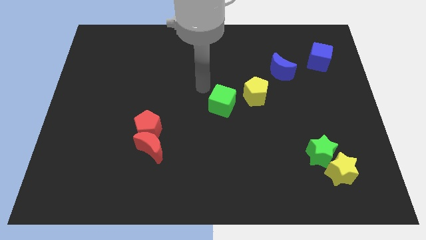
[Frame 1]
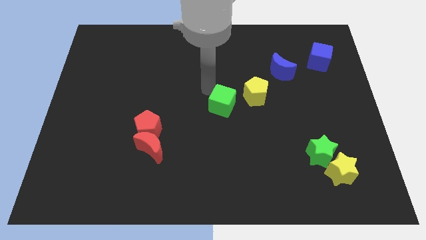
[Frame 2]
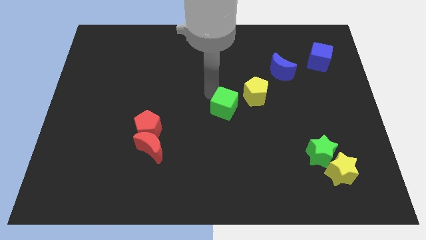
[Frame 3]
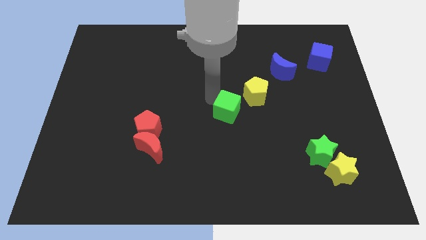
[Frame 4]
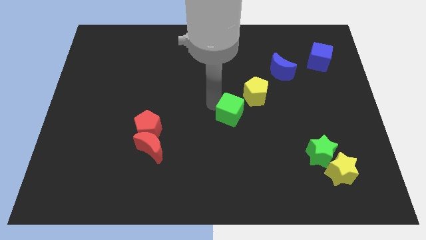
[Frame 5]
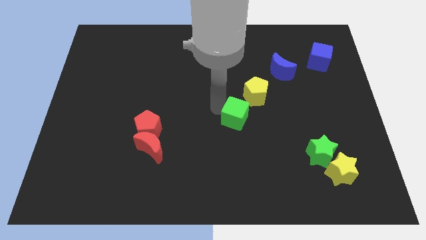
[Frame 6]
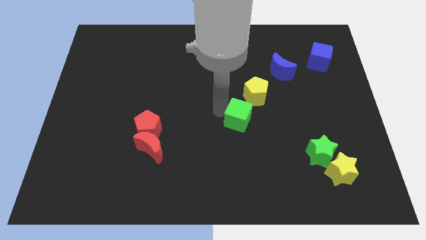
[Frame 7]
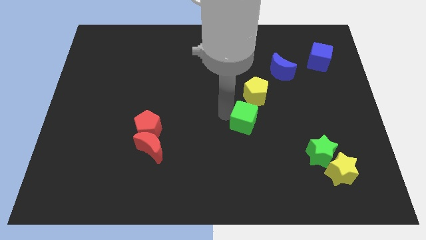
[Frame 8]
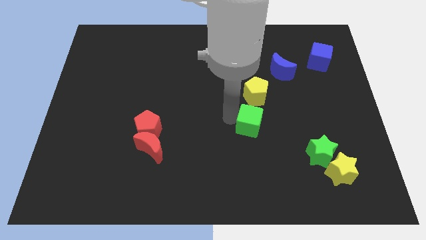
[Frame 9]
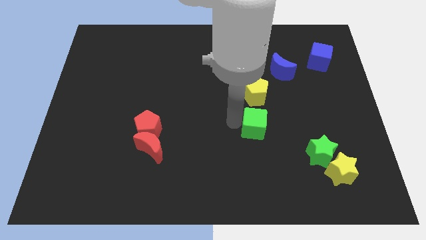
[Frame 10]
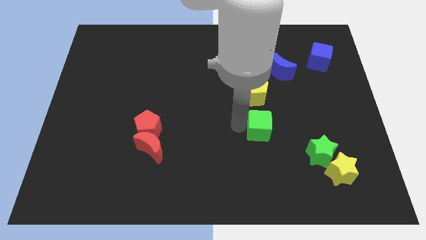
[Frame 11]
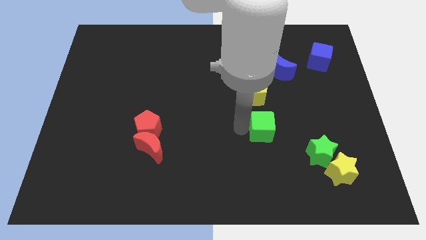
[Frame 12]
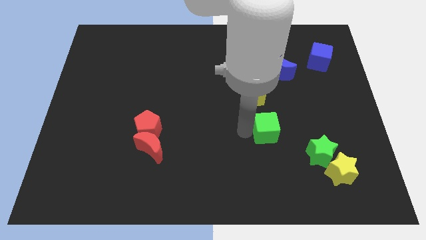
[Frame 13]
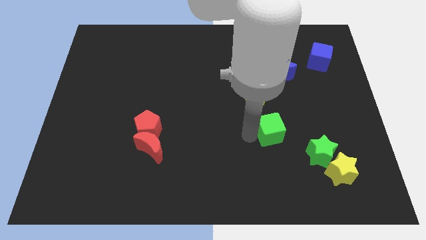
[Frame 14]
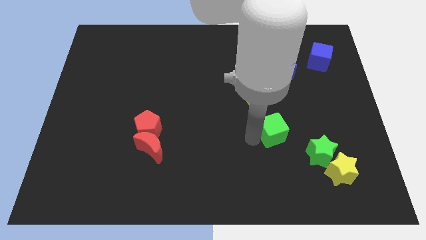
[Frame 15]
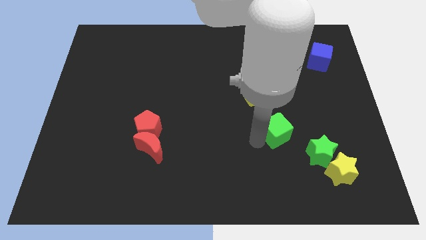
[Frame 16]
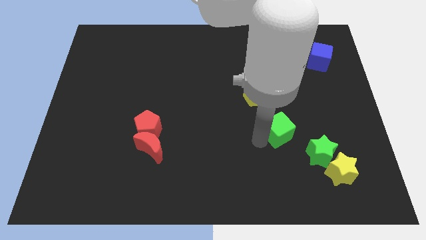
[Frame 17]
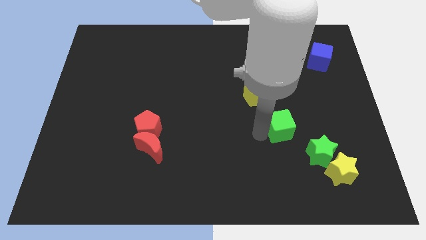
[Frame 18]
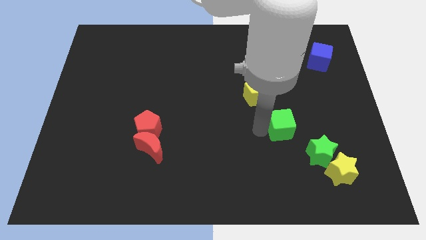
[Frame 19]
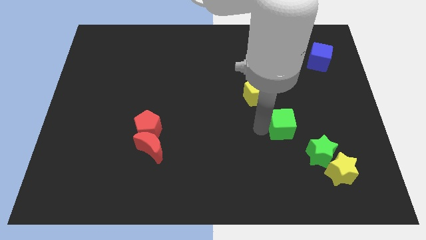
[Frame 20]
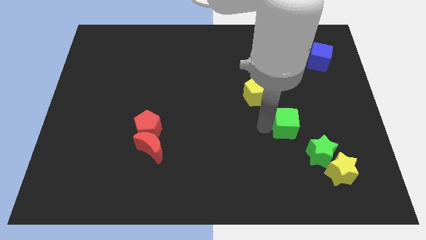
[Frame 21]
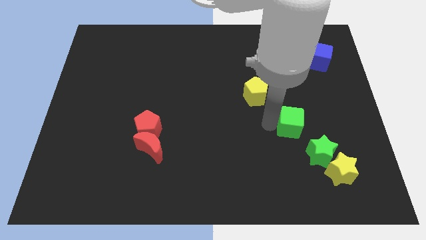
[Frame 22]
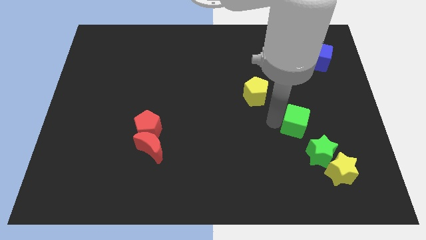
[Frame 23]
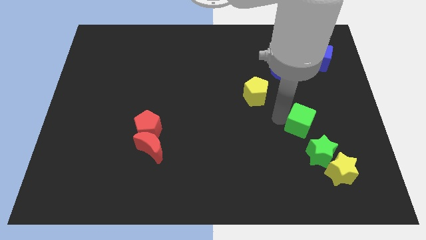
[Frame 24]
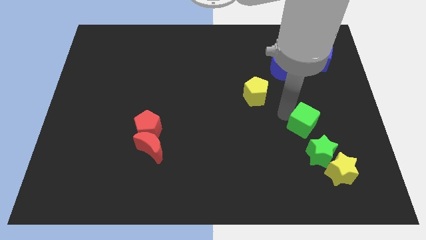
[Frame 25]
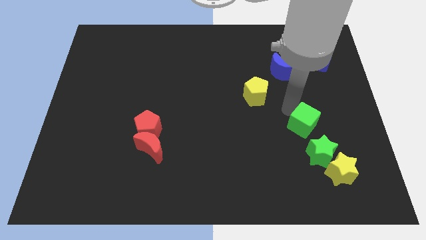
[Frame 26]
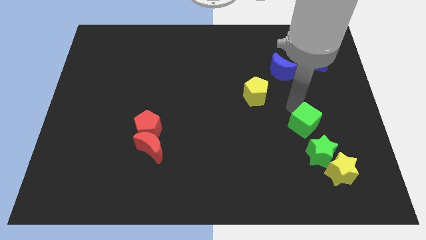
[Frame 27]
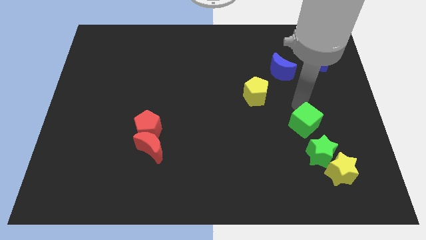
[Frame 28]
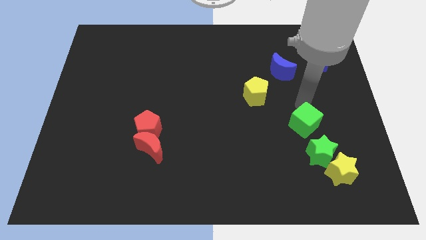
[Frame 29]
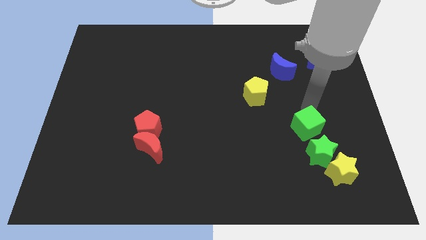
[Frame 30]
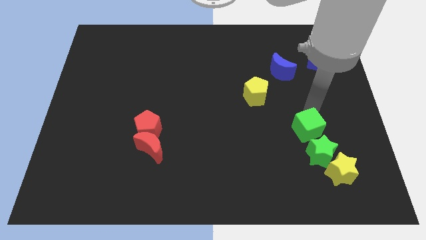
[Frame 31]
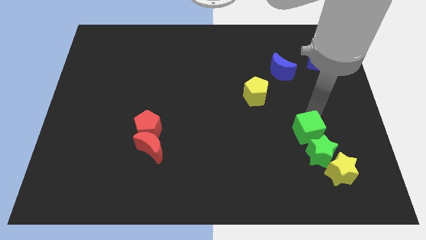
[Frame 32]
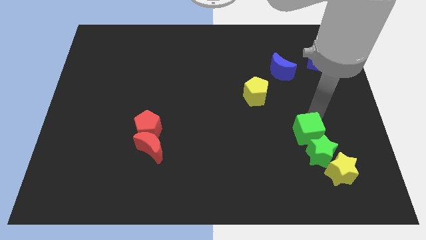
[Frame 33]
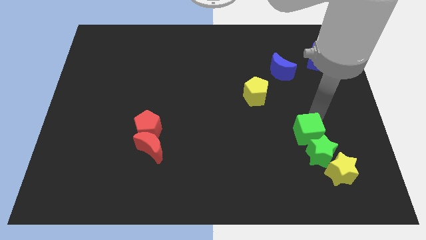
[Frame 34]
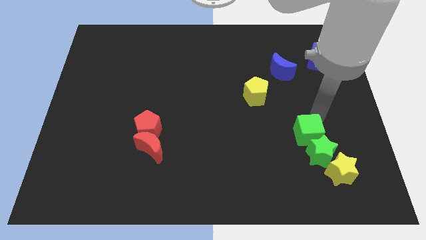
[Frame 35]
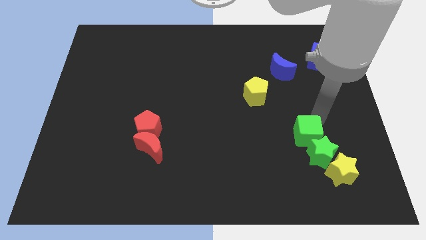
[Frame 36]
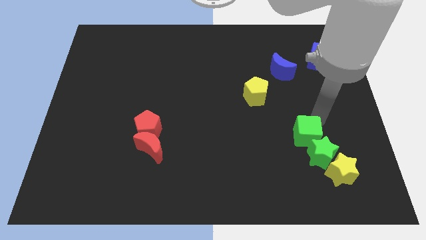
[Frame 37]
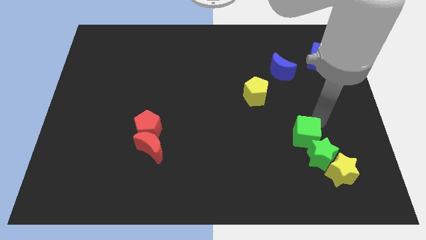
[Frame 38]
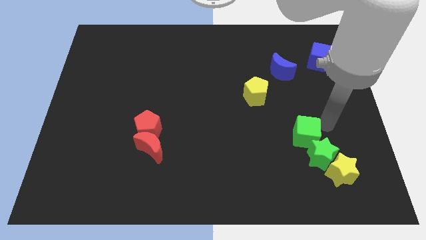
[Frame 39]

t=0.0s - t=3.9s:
push the green cube above to the green star

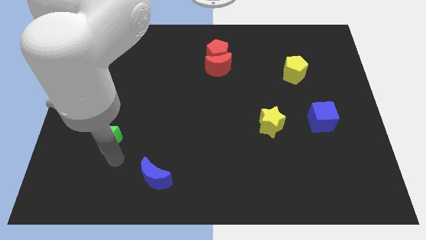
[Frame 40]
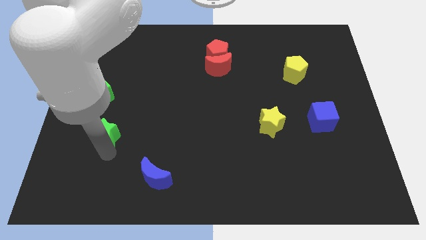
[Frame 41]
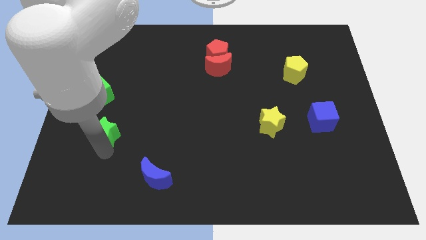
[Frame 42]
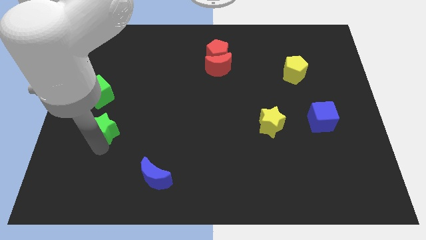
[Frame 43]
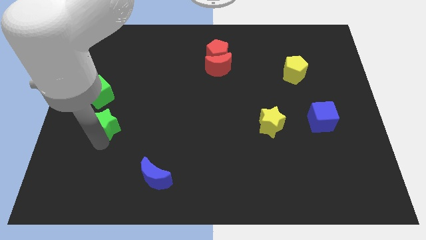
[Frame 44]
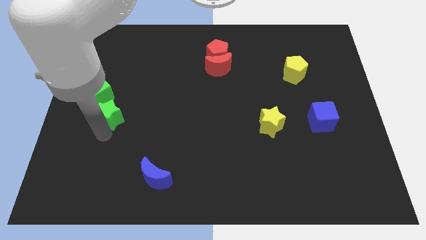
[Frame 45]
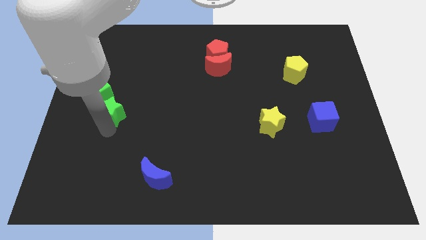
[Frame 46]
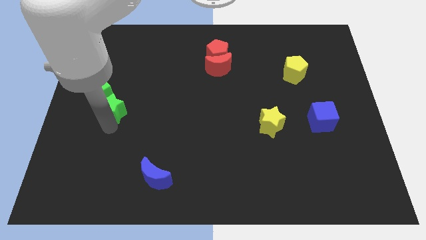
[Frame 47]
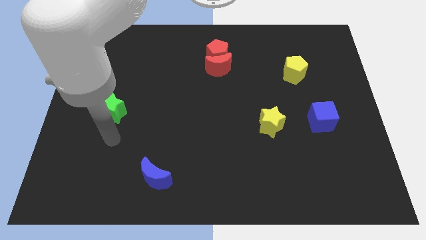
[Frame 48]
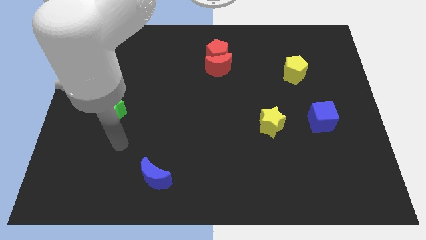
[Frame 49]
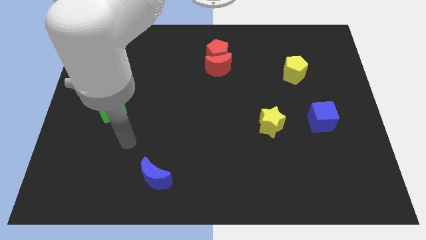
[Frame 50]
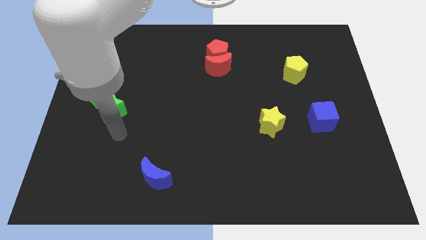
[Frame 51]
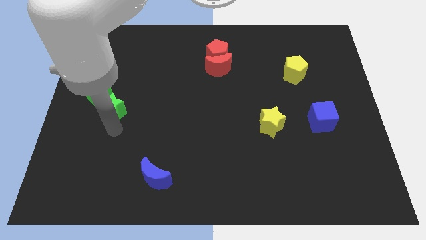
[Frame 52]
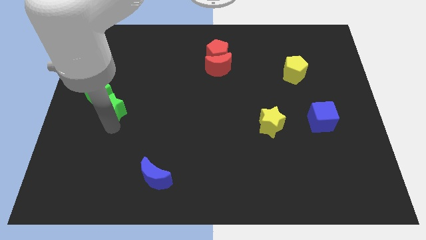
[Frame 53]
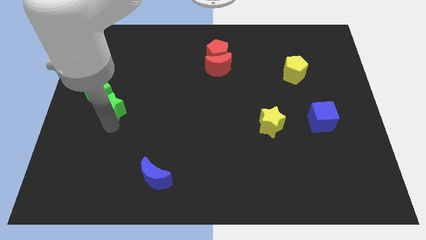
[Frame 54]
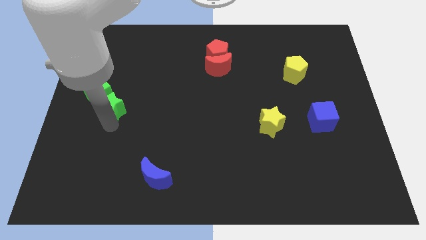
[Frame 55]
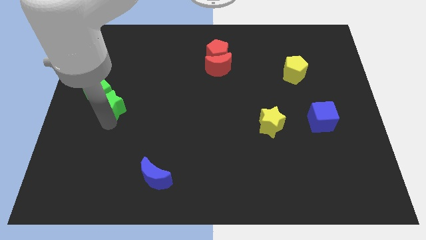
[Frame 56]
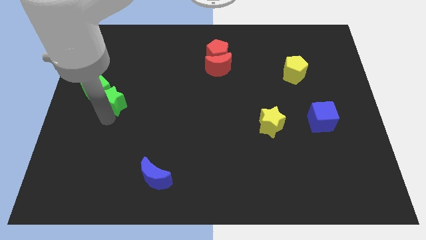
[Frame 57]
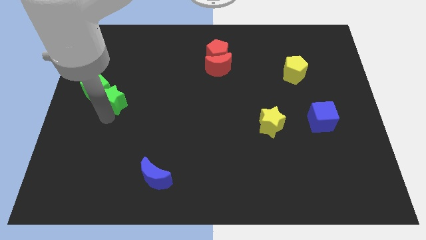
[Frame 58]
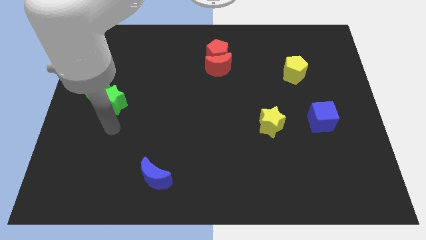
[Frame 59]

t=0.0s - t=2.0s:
push the green star into the green cube

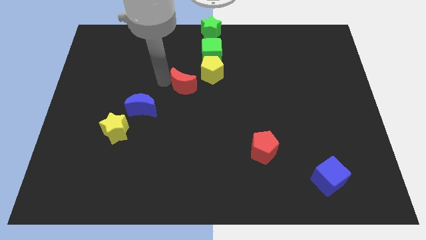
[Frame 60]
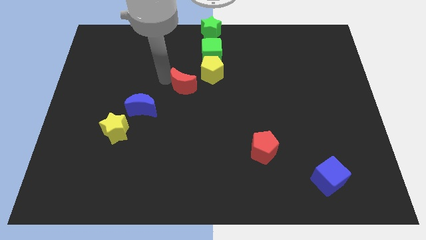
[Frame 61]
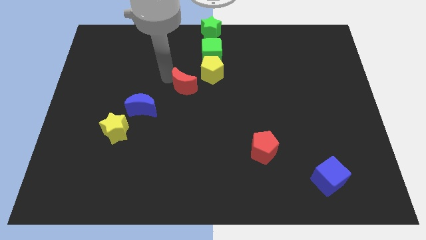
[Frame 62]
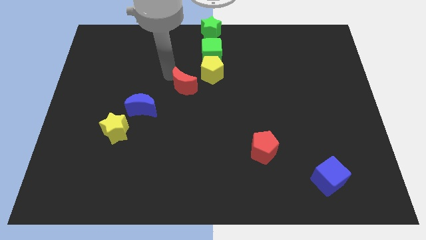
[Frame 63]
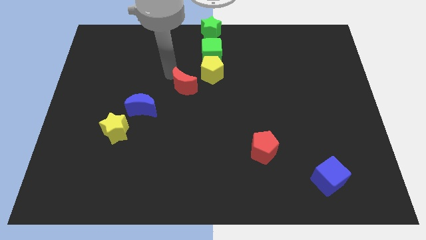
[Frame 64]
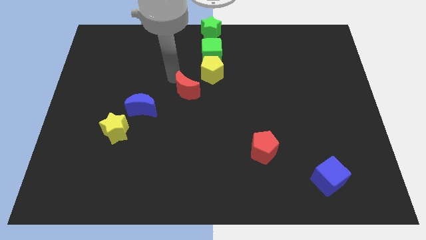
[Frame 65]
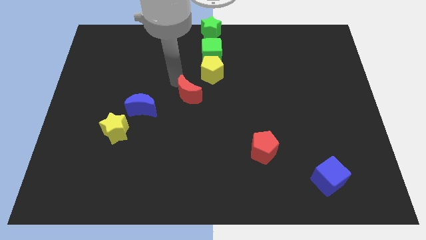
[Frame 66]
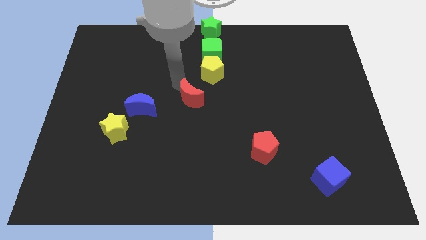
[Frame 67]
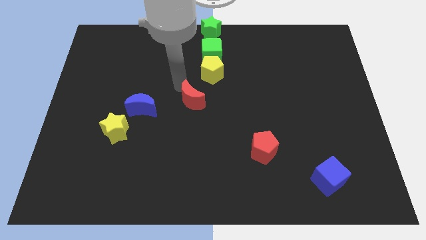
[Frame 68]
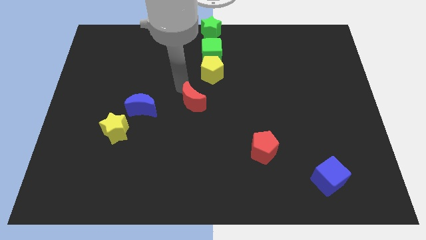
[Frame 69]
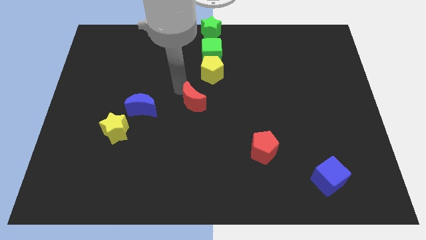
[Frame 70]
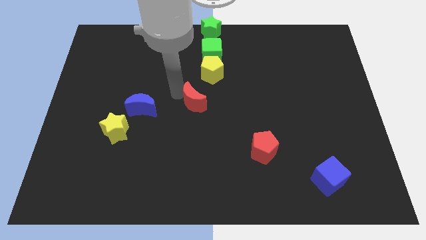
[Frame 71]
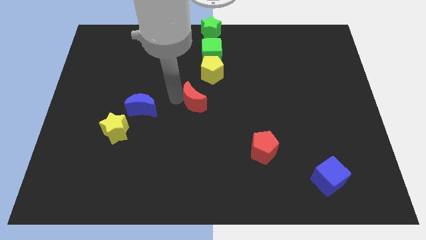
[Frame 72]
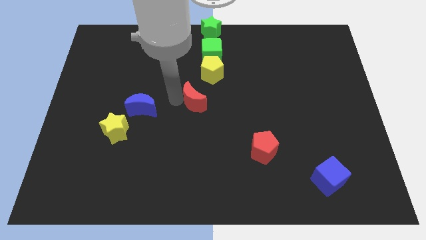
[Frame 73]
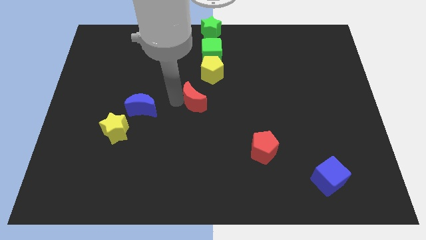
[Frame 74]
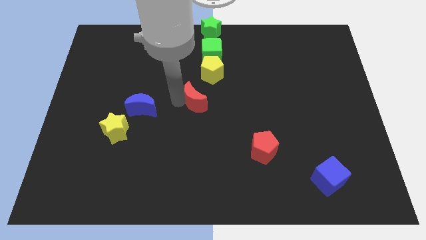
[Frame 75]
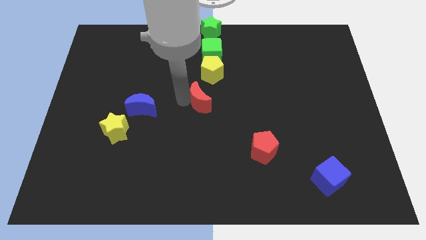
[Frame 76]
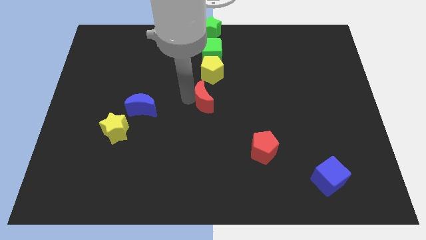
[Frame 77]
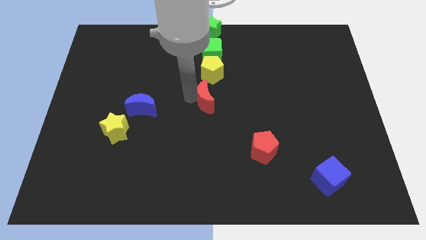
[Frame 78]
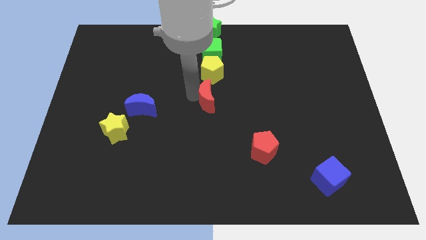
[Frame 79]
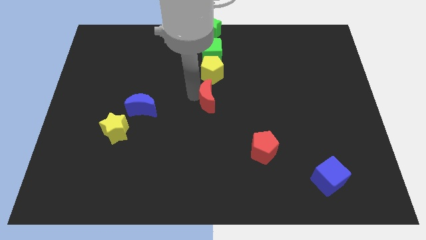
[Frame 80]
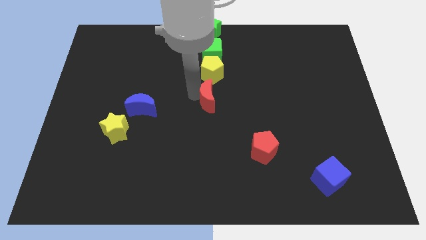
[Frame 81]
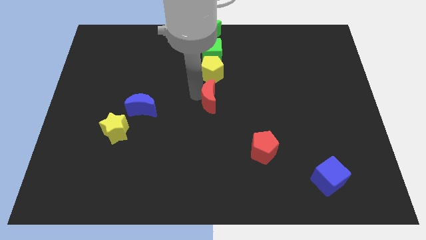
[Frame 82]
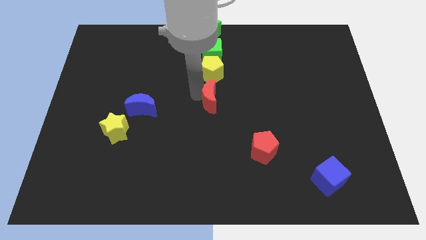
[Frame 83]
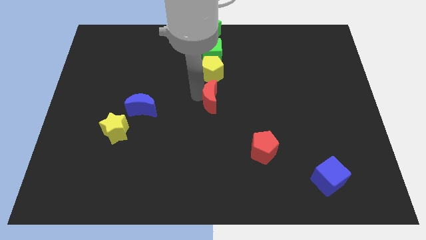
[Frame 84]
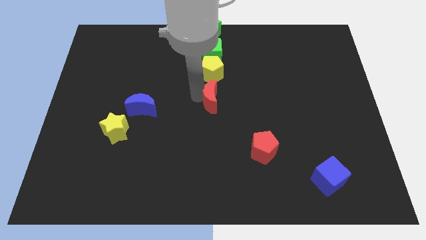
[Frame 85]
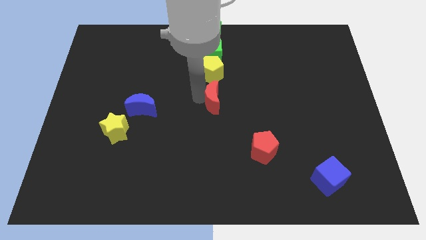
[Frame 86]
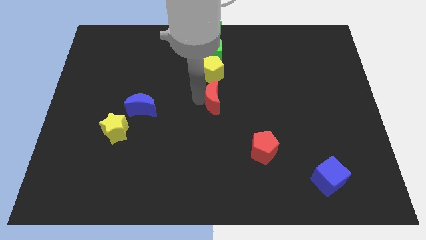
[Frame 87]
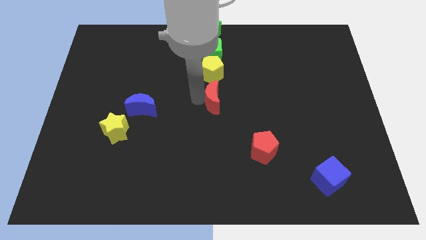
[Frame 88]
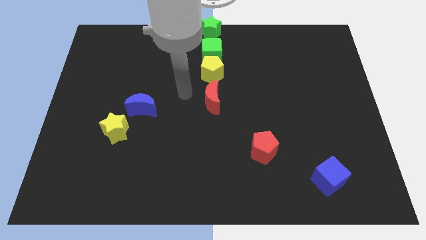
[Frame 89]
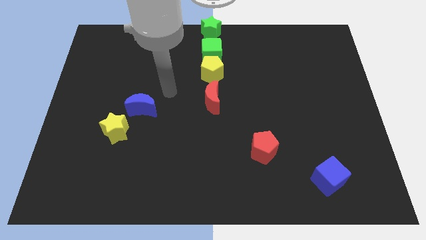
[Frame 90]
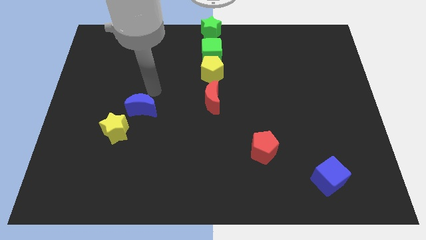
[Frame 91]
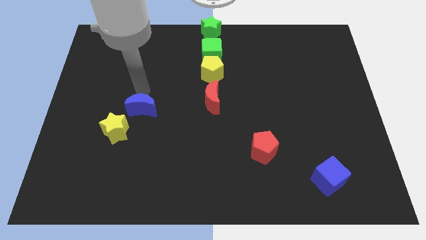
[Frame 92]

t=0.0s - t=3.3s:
move the red crescent below the yellow pentagon at the center
